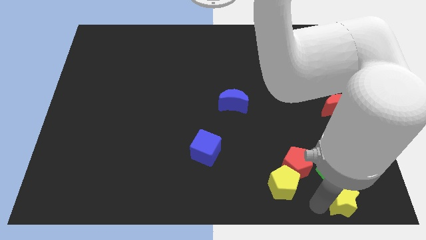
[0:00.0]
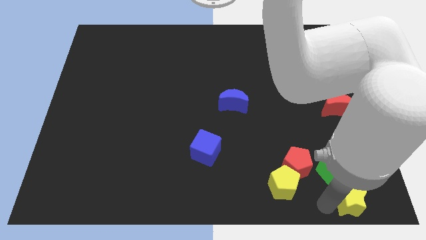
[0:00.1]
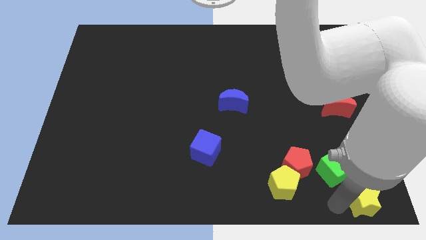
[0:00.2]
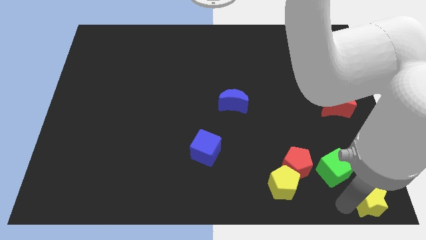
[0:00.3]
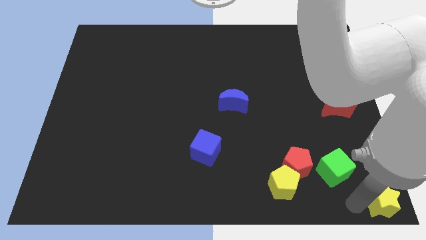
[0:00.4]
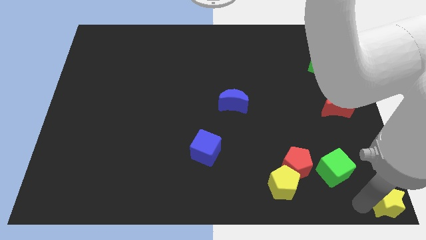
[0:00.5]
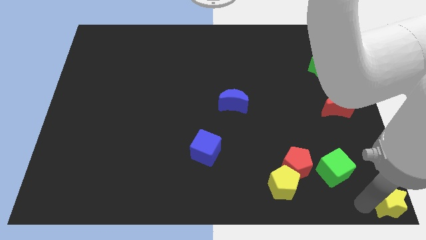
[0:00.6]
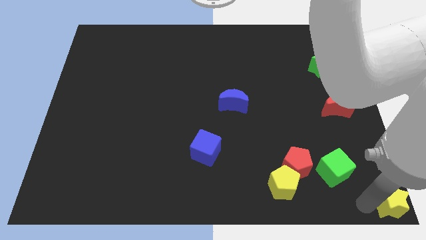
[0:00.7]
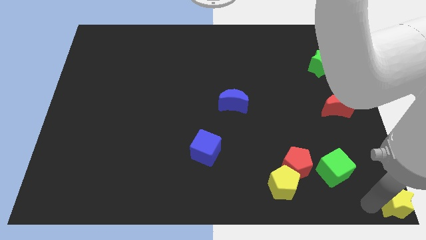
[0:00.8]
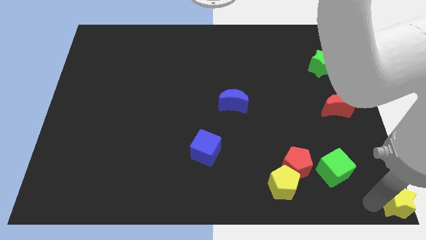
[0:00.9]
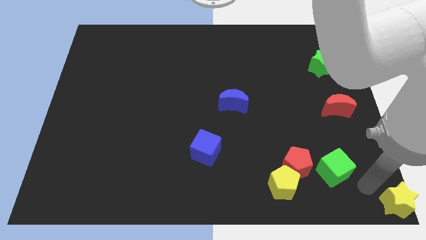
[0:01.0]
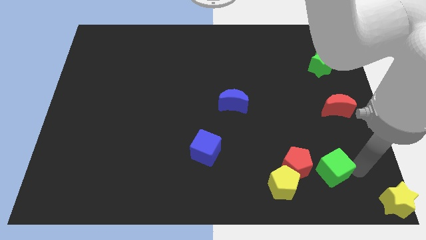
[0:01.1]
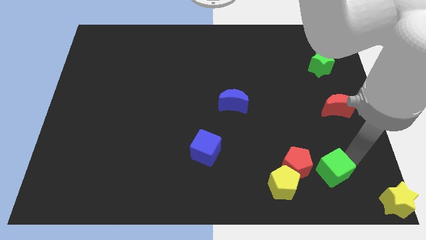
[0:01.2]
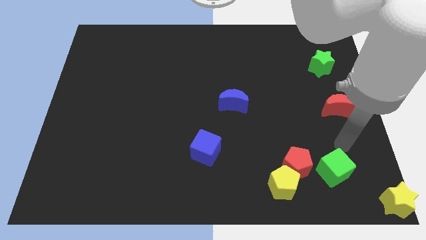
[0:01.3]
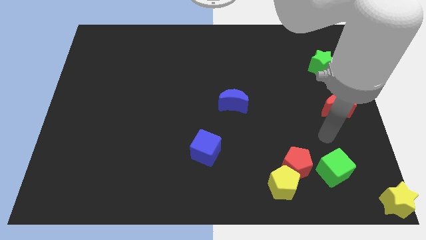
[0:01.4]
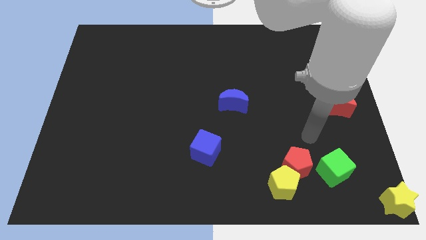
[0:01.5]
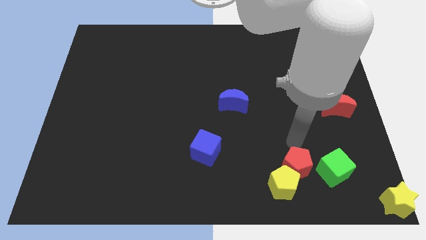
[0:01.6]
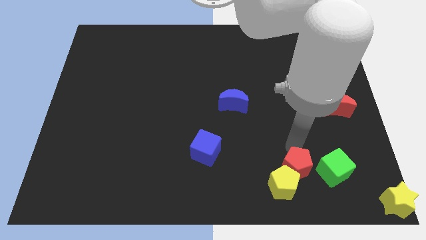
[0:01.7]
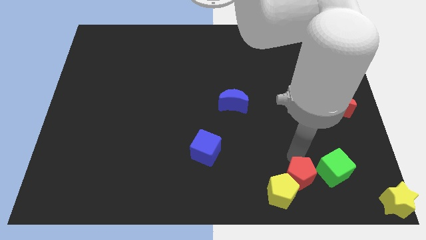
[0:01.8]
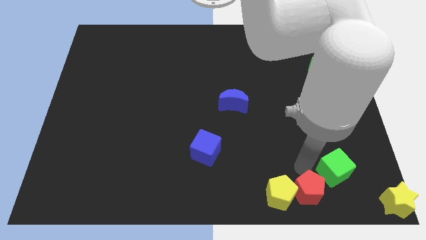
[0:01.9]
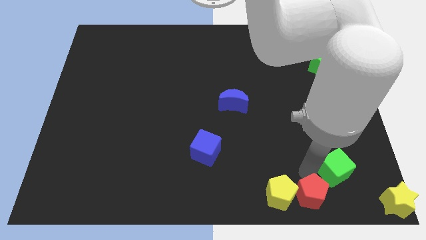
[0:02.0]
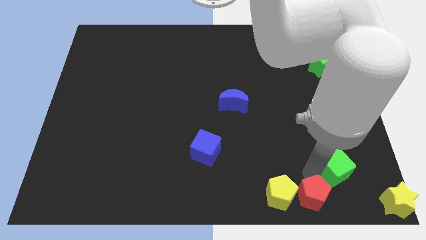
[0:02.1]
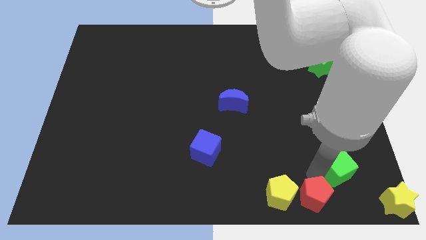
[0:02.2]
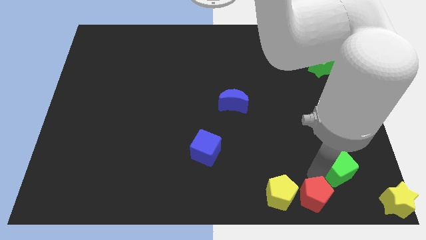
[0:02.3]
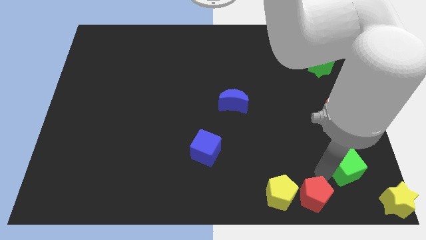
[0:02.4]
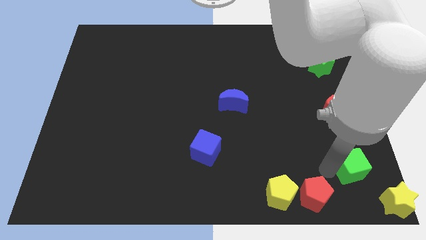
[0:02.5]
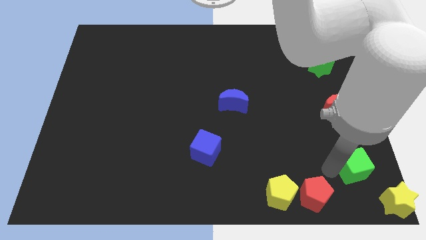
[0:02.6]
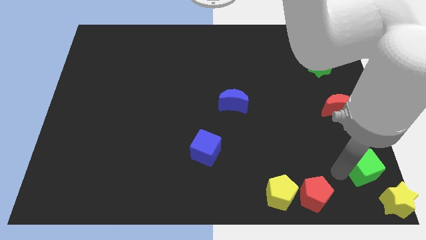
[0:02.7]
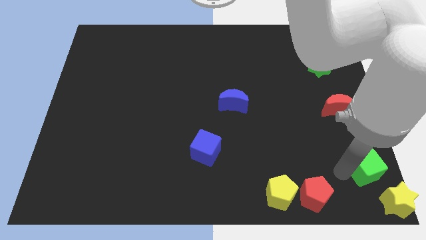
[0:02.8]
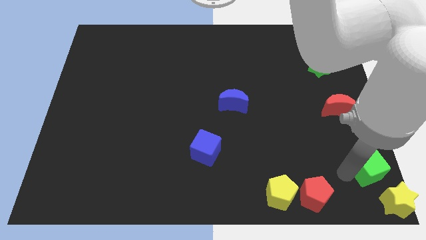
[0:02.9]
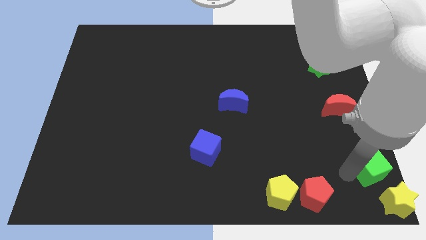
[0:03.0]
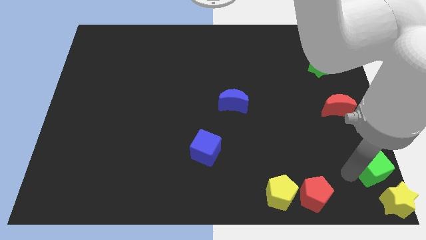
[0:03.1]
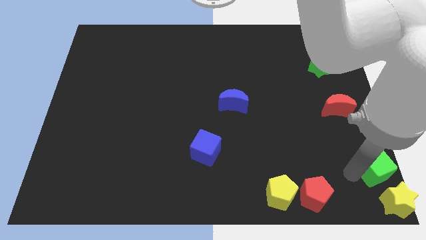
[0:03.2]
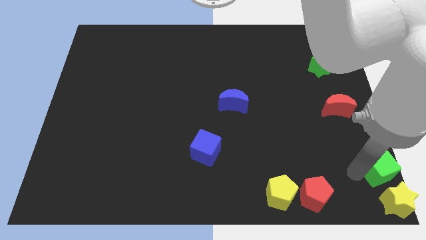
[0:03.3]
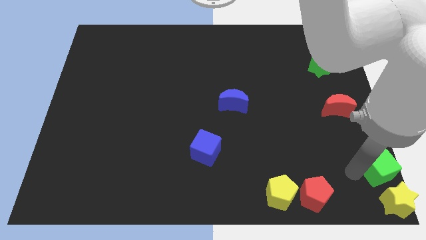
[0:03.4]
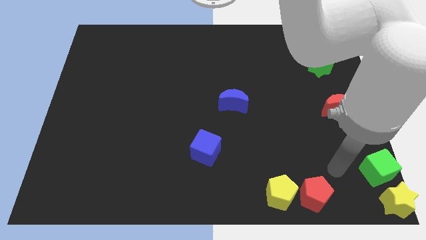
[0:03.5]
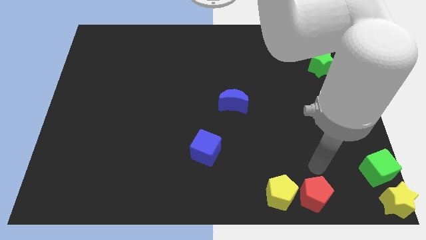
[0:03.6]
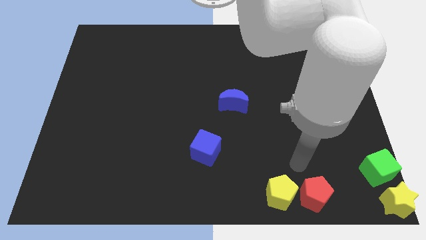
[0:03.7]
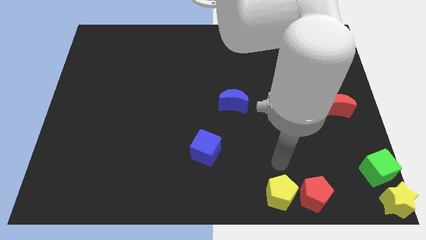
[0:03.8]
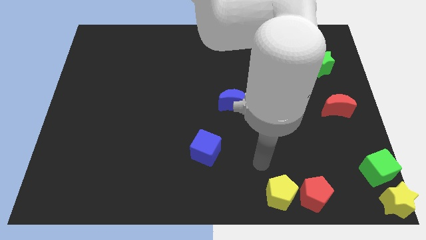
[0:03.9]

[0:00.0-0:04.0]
move the green cube above to the yellow star

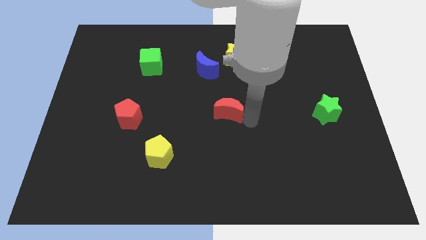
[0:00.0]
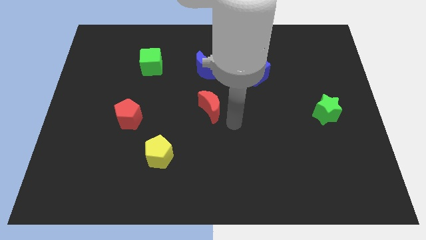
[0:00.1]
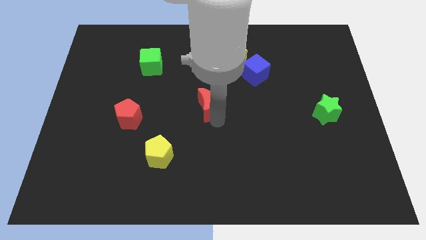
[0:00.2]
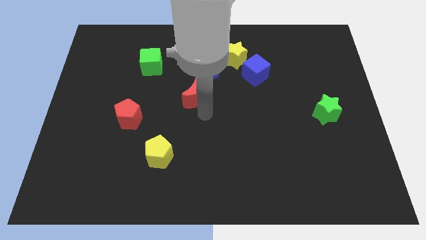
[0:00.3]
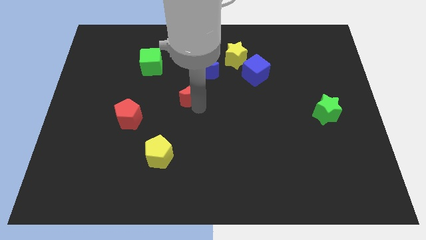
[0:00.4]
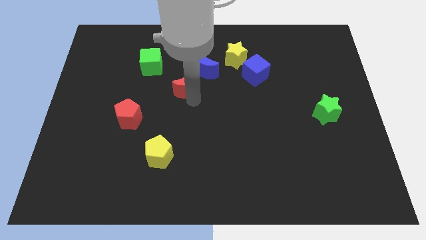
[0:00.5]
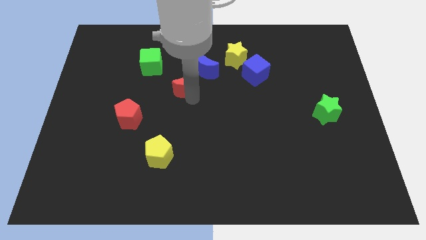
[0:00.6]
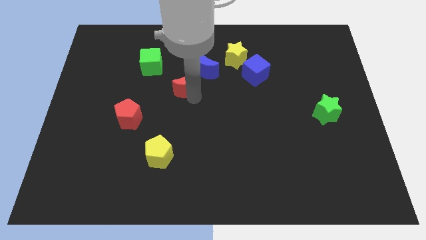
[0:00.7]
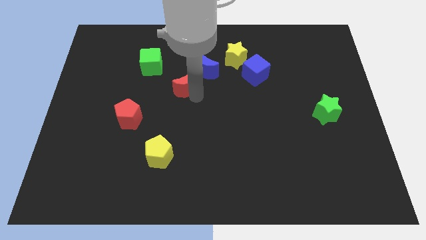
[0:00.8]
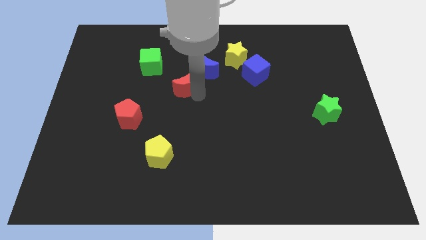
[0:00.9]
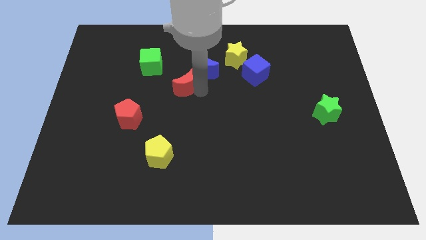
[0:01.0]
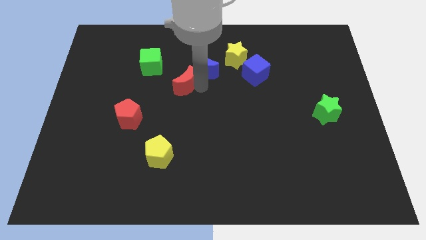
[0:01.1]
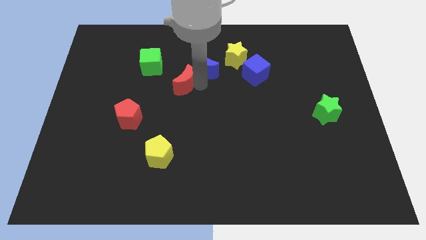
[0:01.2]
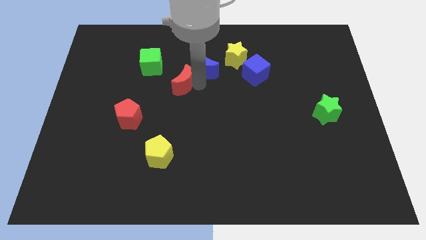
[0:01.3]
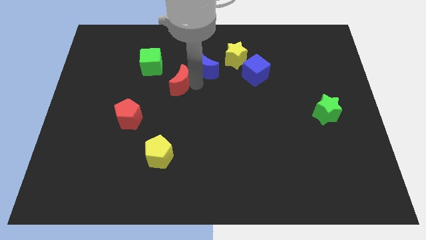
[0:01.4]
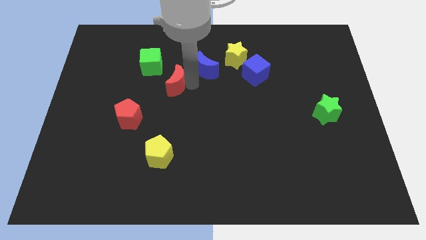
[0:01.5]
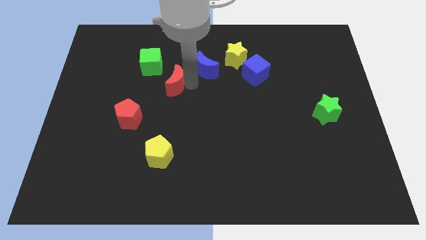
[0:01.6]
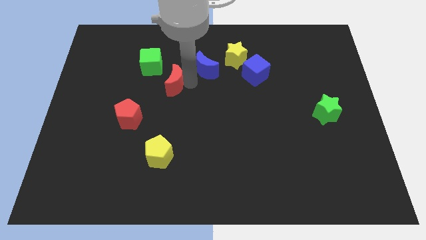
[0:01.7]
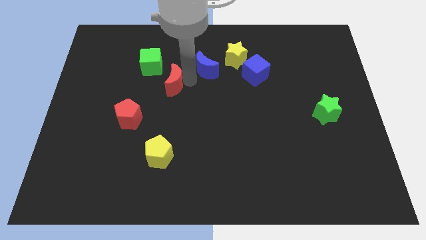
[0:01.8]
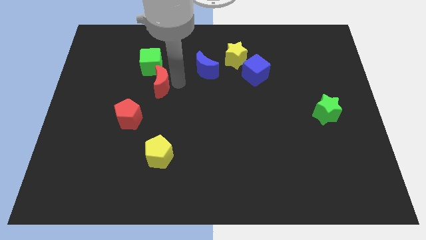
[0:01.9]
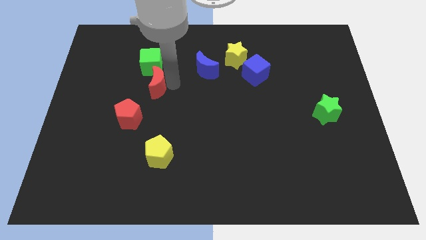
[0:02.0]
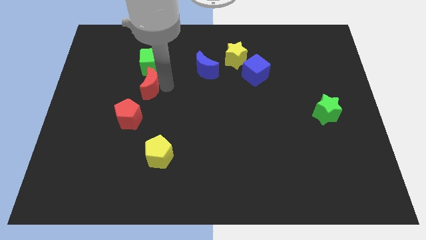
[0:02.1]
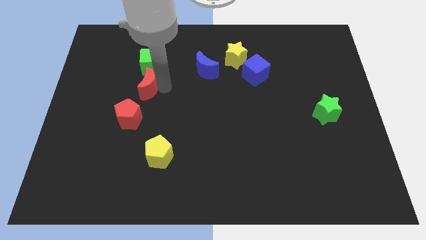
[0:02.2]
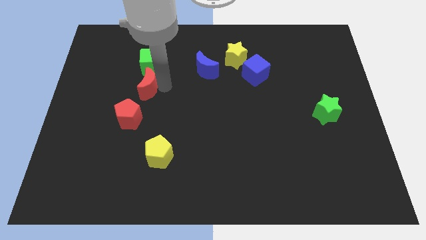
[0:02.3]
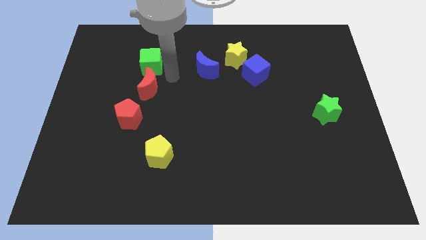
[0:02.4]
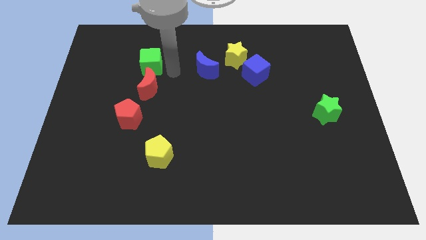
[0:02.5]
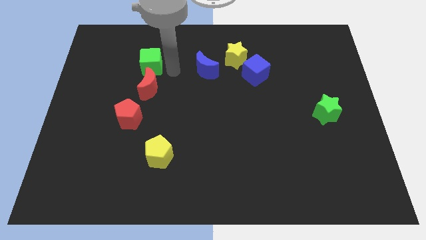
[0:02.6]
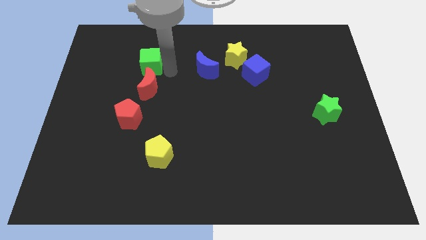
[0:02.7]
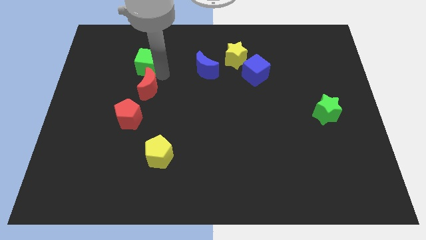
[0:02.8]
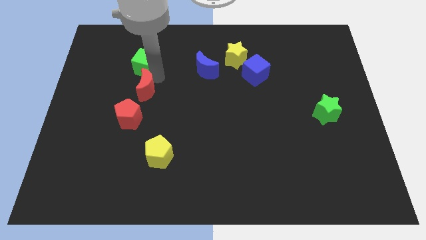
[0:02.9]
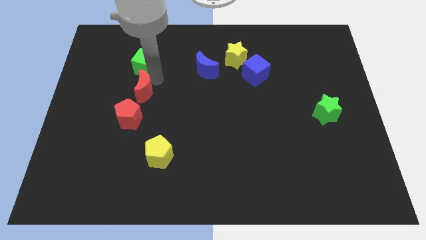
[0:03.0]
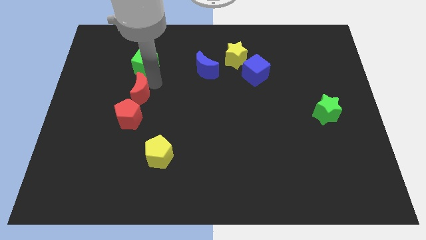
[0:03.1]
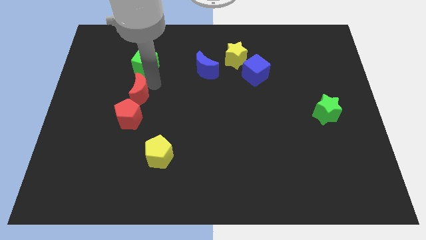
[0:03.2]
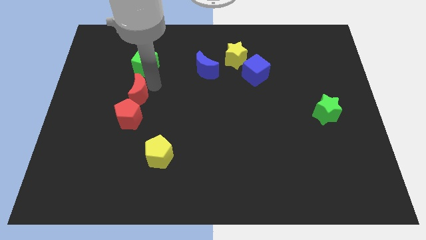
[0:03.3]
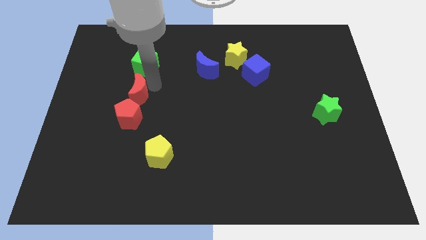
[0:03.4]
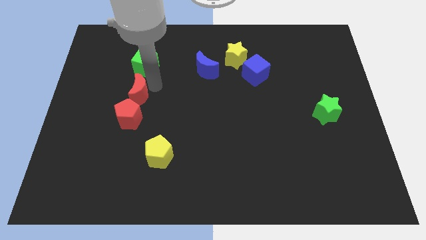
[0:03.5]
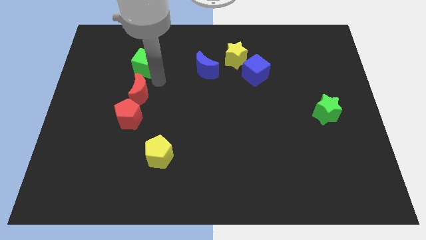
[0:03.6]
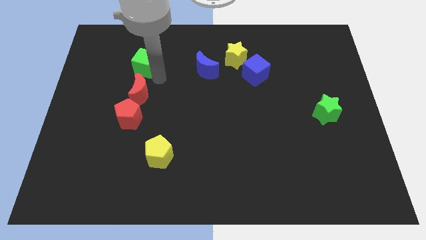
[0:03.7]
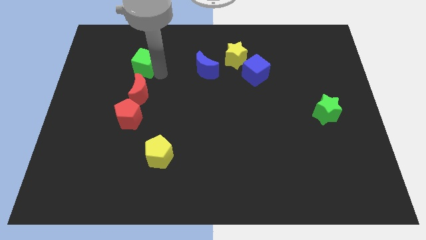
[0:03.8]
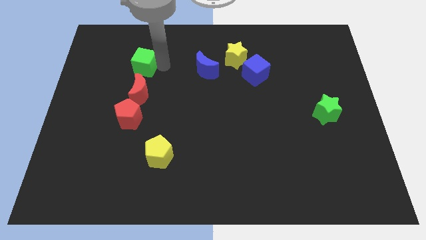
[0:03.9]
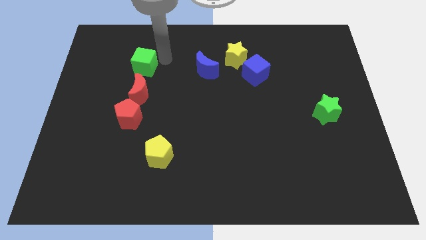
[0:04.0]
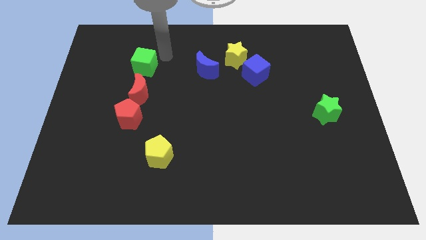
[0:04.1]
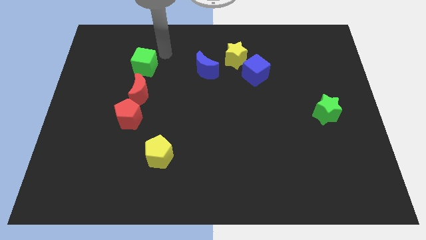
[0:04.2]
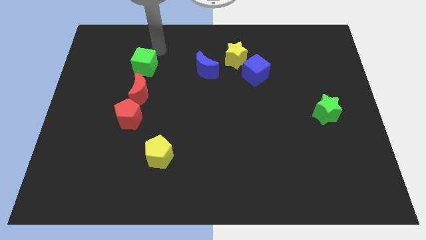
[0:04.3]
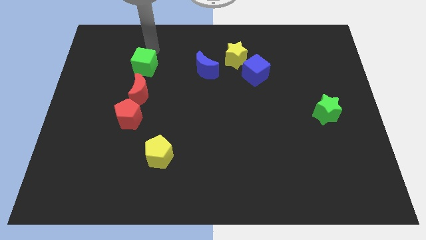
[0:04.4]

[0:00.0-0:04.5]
push red moon to the top of the red pentagon

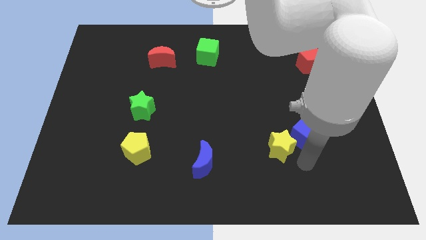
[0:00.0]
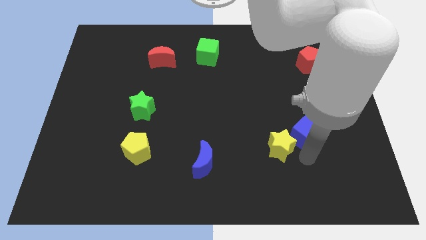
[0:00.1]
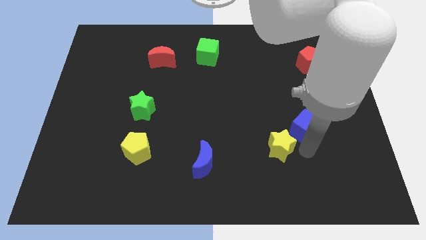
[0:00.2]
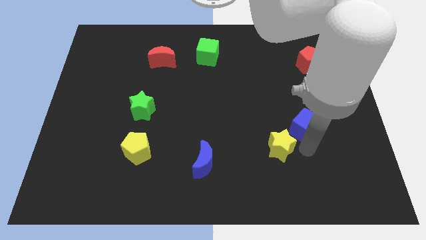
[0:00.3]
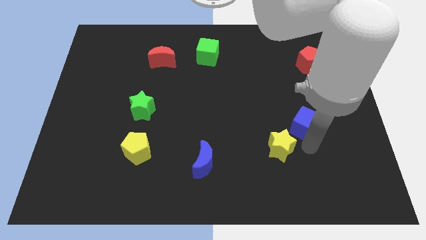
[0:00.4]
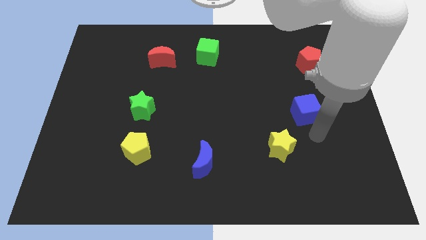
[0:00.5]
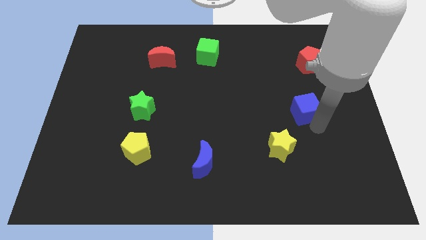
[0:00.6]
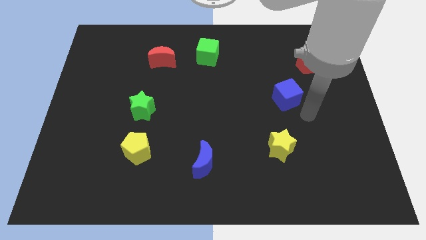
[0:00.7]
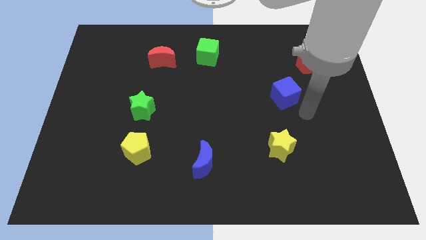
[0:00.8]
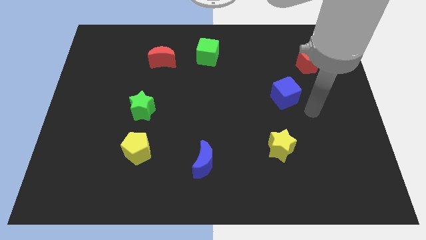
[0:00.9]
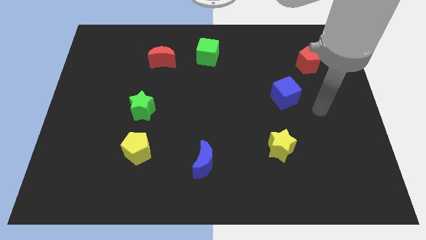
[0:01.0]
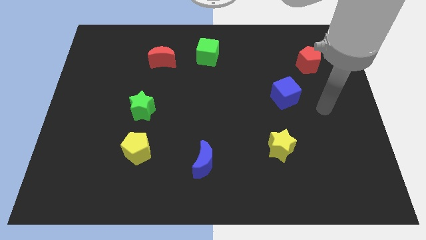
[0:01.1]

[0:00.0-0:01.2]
separate the blue cube from the yellow star
